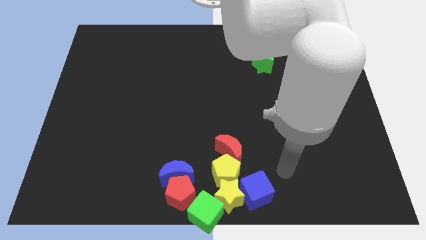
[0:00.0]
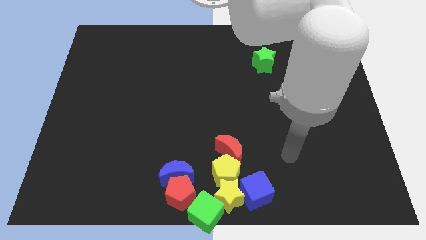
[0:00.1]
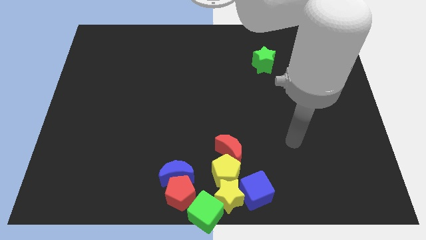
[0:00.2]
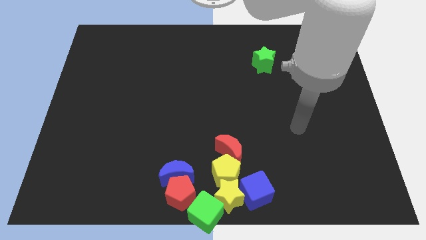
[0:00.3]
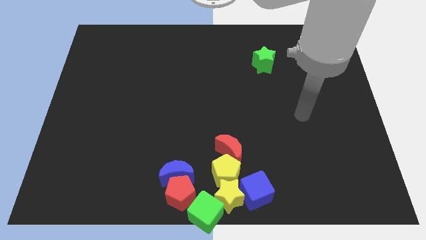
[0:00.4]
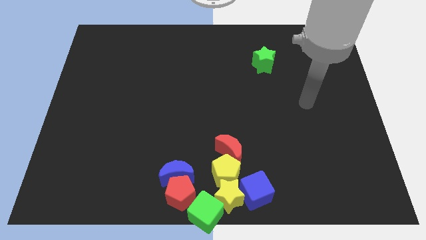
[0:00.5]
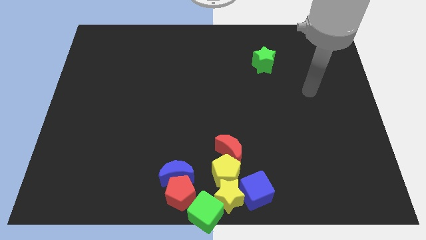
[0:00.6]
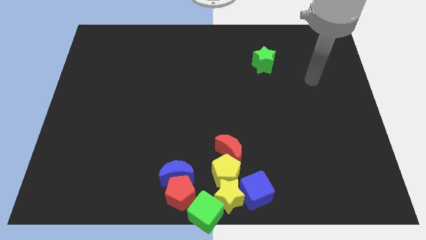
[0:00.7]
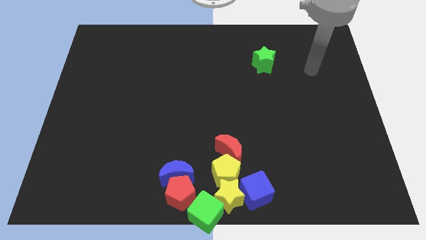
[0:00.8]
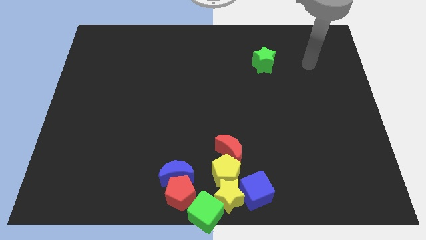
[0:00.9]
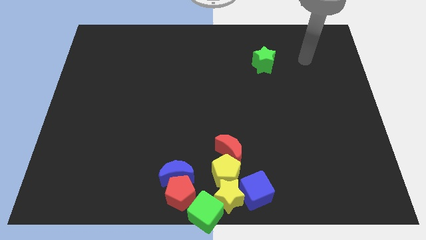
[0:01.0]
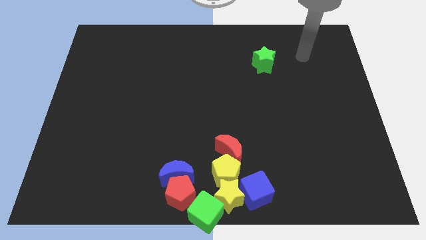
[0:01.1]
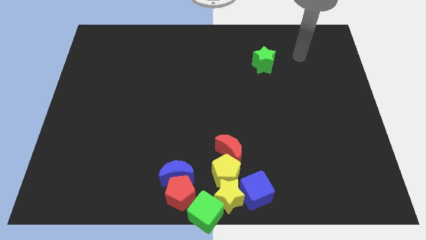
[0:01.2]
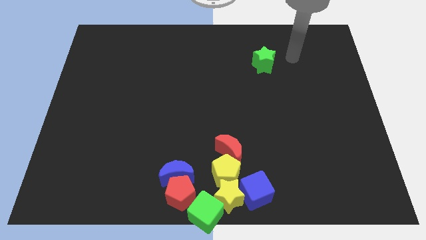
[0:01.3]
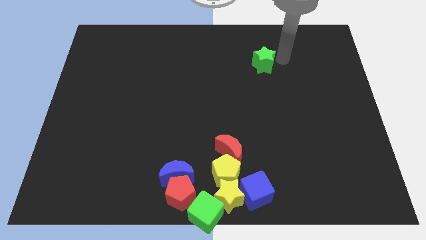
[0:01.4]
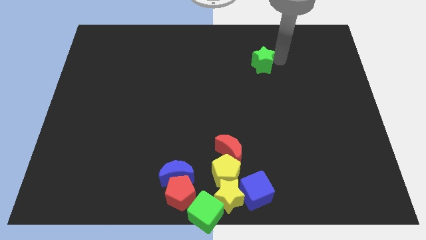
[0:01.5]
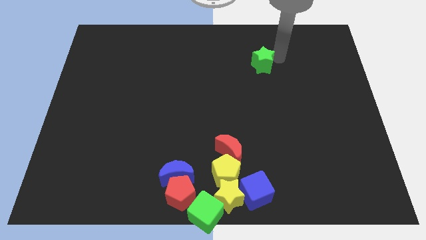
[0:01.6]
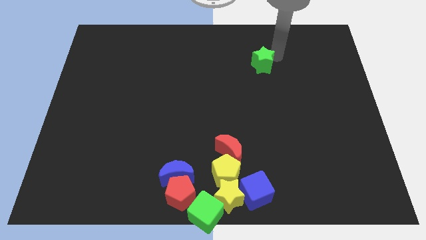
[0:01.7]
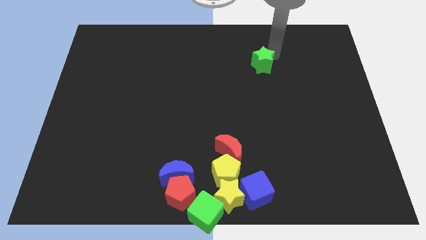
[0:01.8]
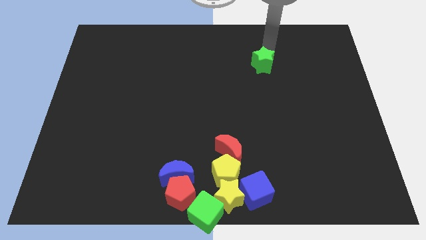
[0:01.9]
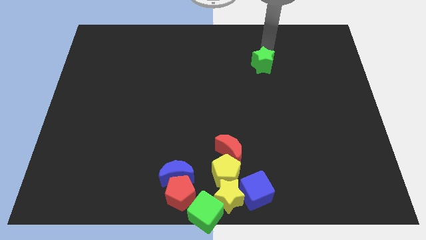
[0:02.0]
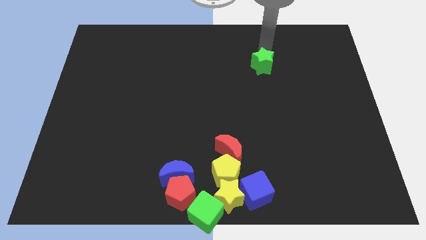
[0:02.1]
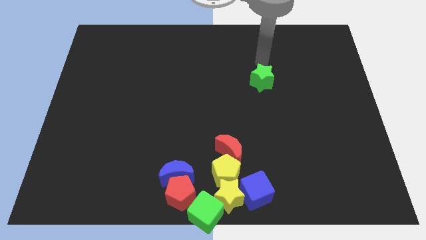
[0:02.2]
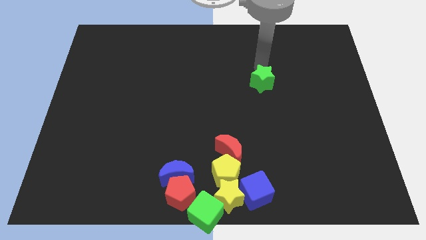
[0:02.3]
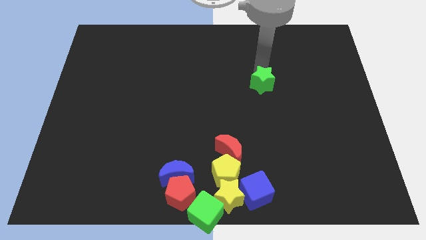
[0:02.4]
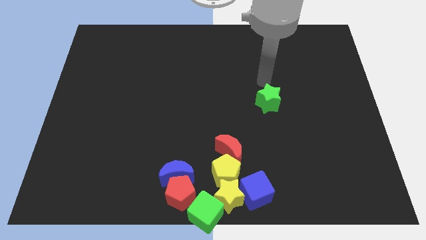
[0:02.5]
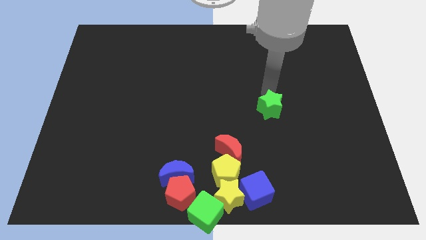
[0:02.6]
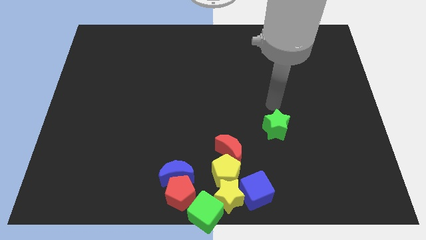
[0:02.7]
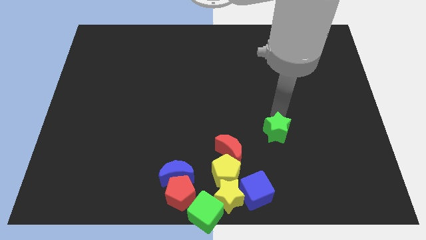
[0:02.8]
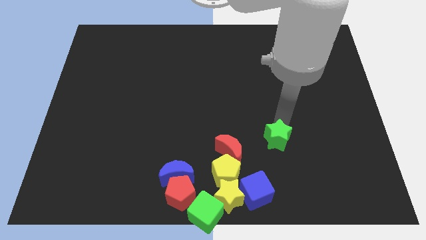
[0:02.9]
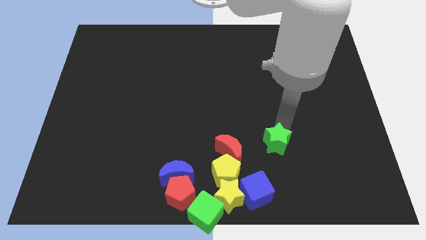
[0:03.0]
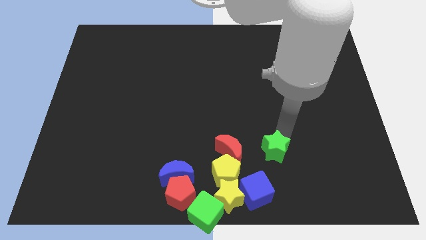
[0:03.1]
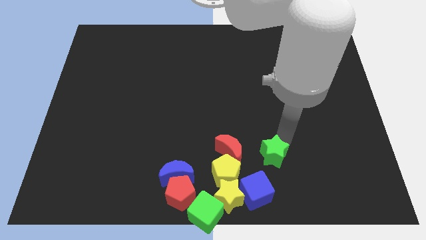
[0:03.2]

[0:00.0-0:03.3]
place green star to the right of the red moon

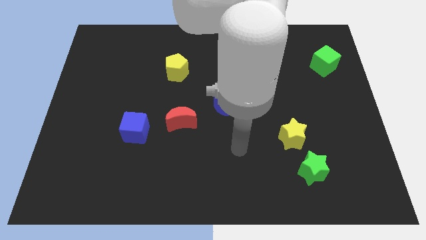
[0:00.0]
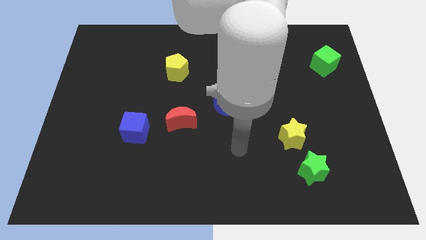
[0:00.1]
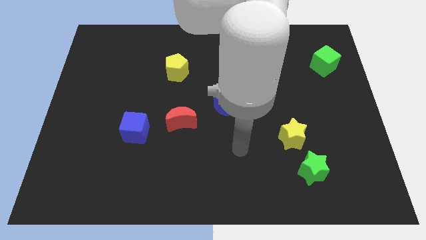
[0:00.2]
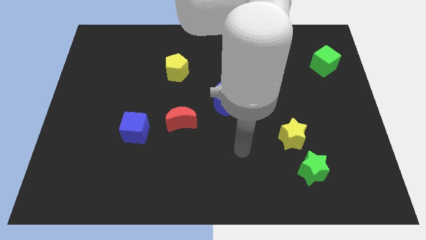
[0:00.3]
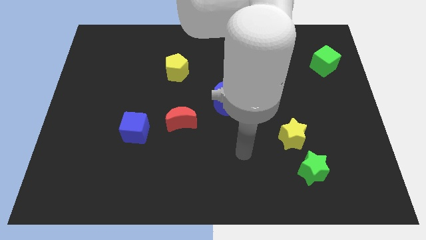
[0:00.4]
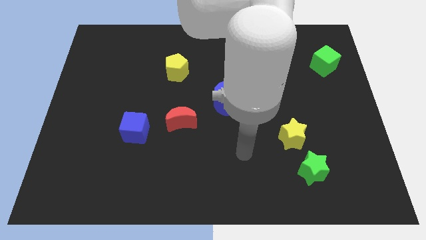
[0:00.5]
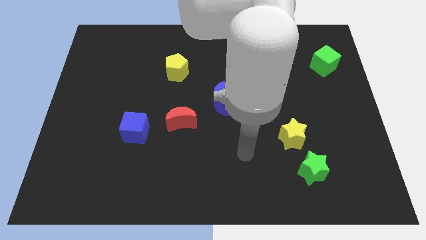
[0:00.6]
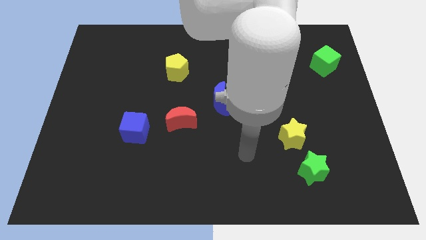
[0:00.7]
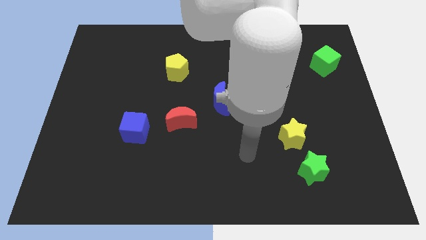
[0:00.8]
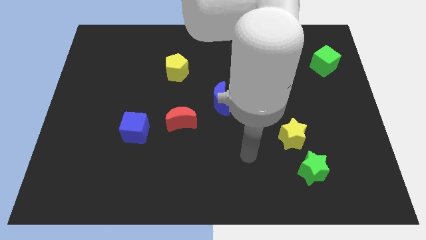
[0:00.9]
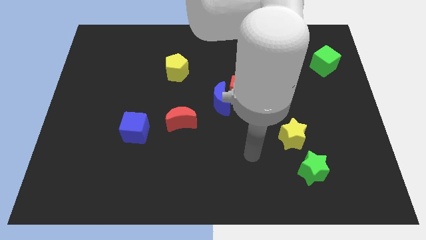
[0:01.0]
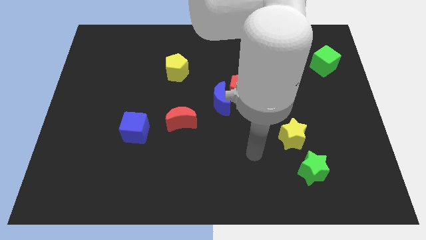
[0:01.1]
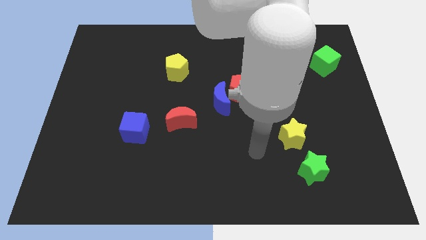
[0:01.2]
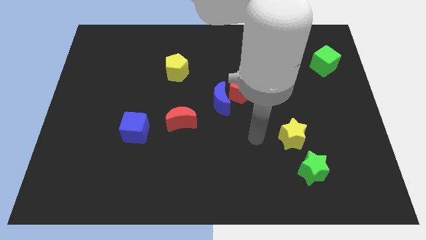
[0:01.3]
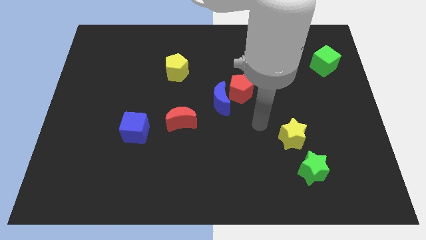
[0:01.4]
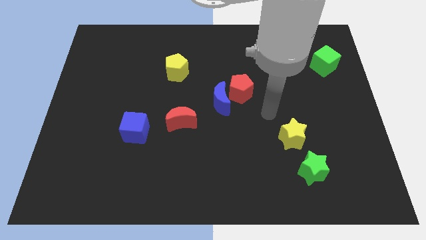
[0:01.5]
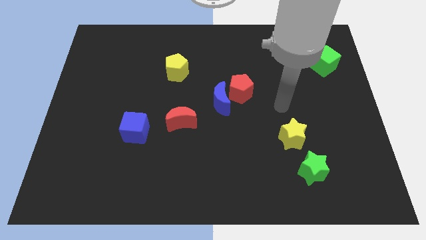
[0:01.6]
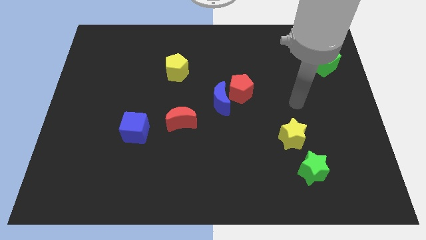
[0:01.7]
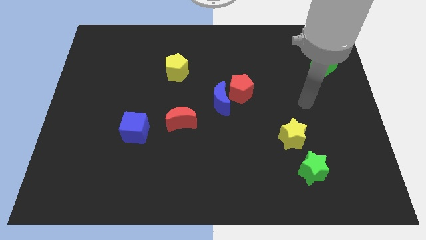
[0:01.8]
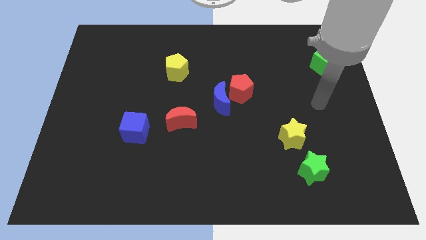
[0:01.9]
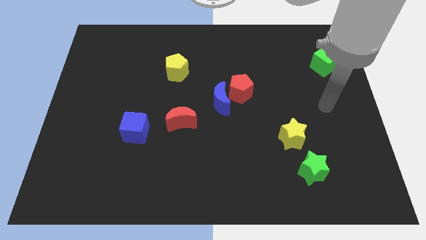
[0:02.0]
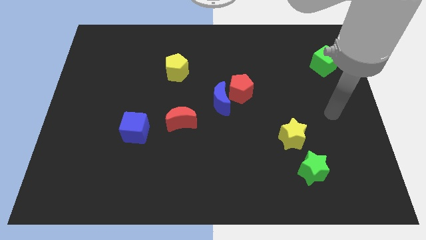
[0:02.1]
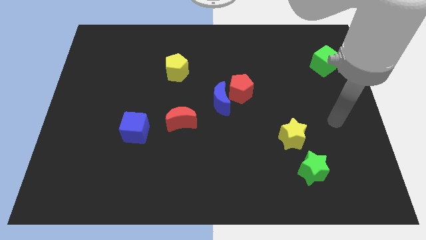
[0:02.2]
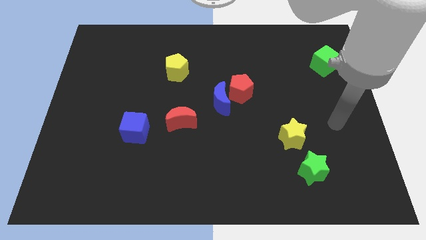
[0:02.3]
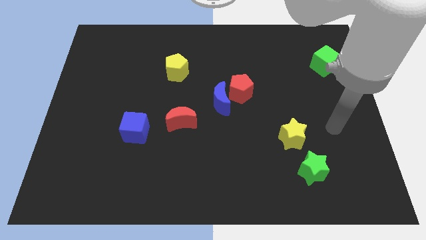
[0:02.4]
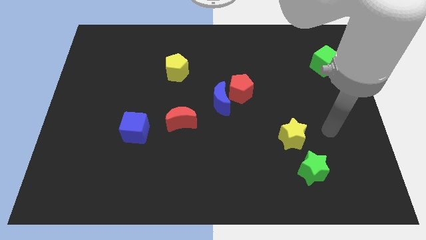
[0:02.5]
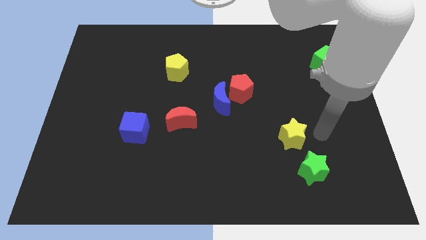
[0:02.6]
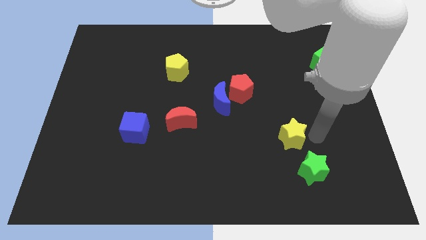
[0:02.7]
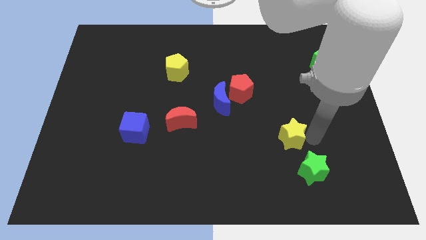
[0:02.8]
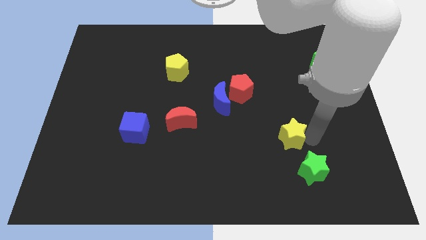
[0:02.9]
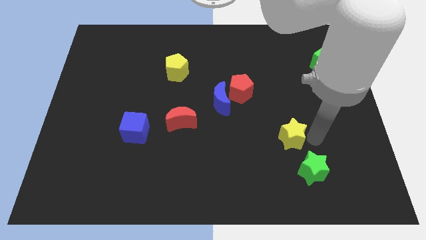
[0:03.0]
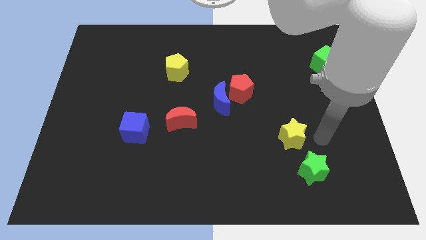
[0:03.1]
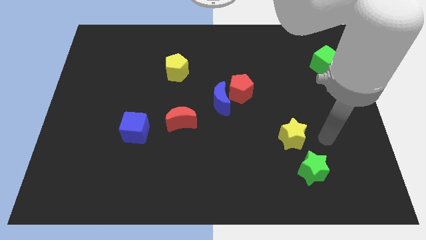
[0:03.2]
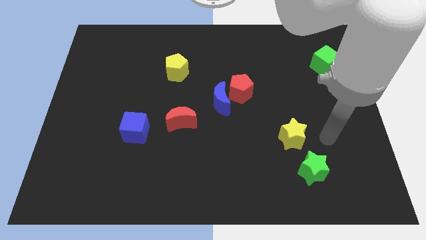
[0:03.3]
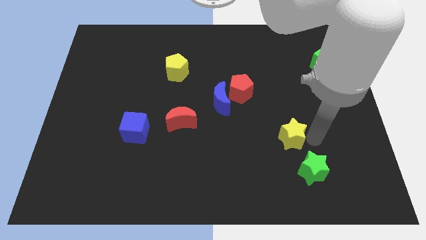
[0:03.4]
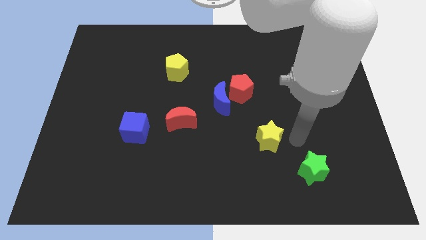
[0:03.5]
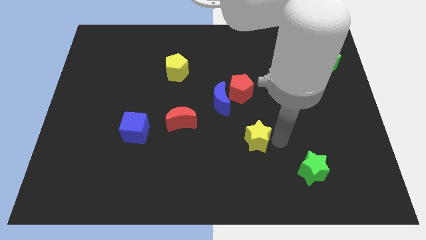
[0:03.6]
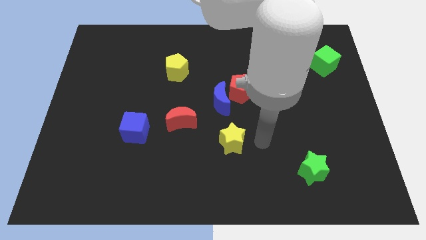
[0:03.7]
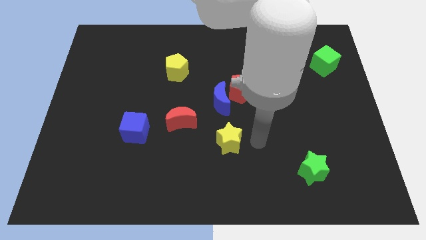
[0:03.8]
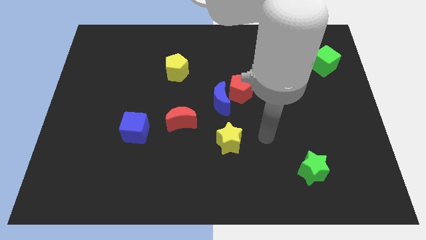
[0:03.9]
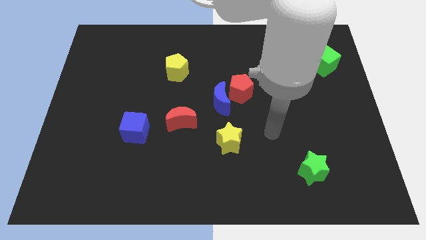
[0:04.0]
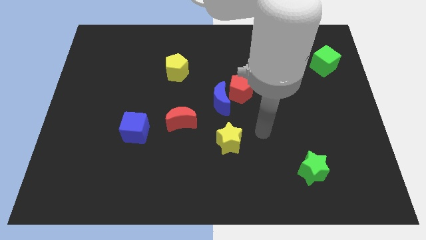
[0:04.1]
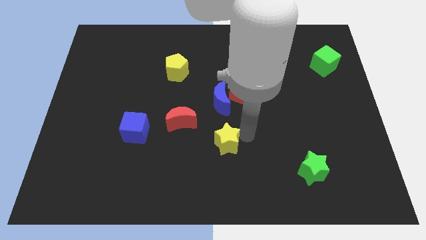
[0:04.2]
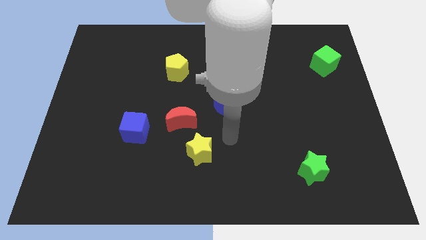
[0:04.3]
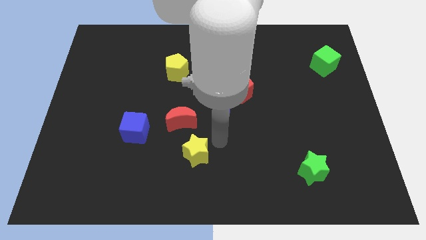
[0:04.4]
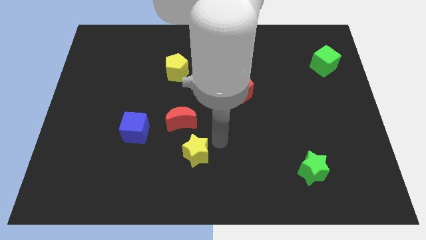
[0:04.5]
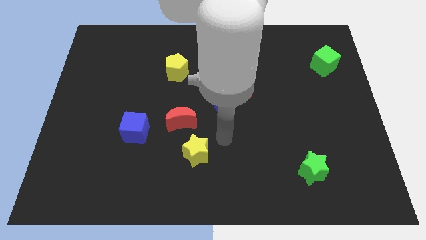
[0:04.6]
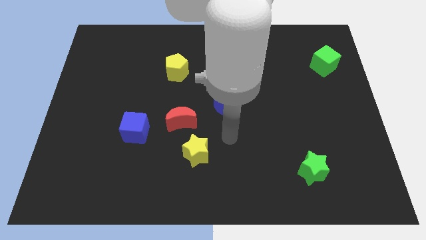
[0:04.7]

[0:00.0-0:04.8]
move yellow star towards left

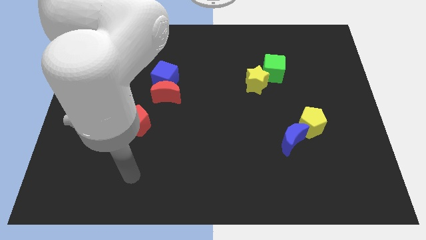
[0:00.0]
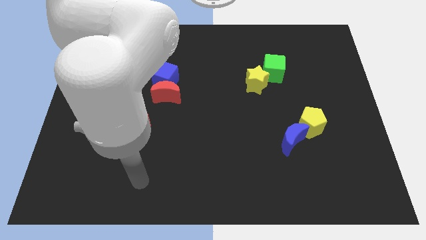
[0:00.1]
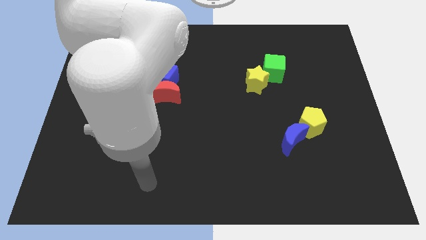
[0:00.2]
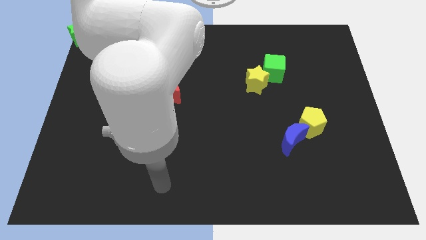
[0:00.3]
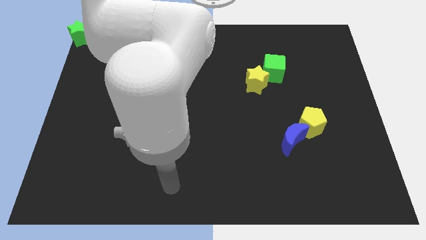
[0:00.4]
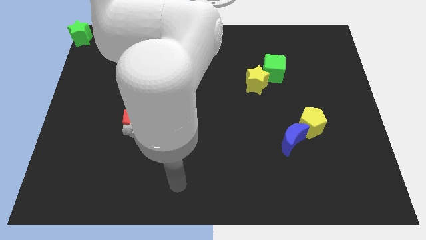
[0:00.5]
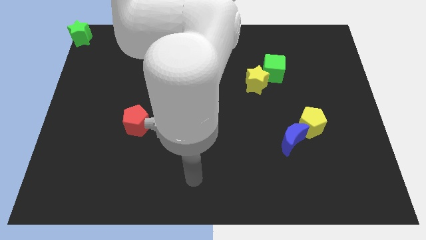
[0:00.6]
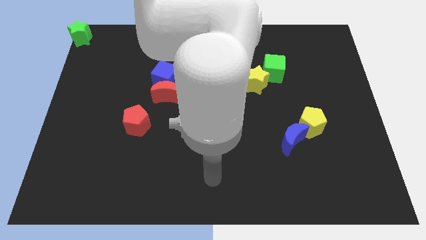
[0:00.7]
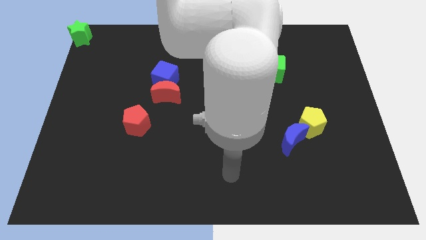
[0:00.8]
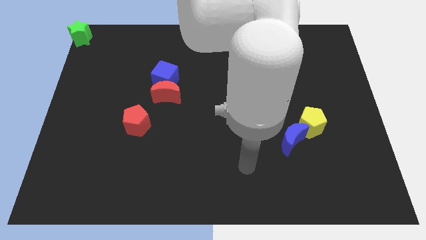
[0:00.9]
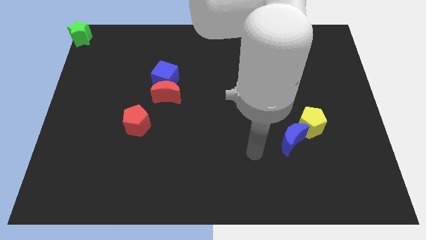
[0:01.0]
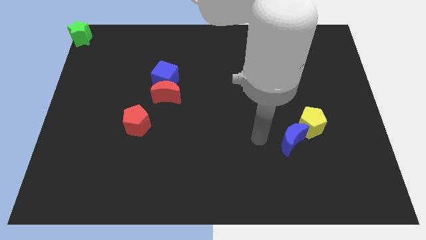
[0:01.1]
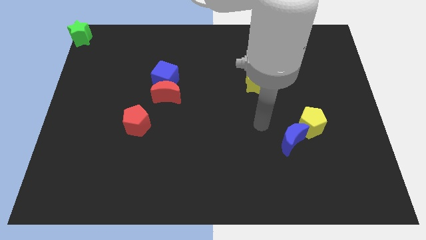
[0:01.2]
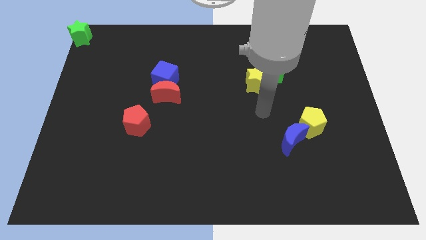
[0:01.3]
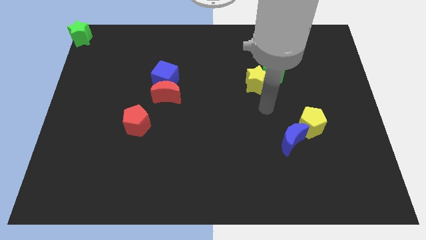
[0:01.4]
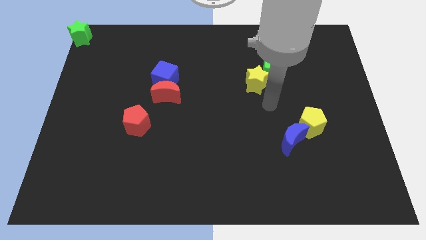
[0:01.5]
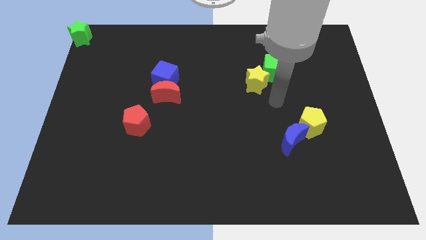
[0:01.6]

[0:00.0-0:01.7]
move arm towards the yellow star
